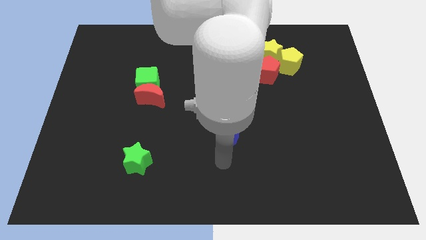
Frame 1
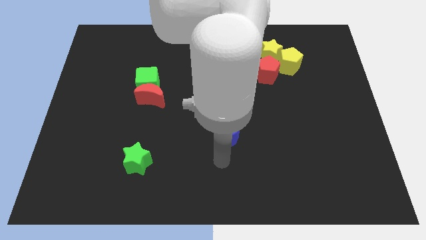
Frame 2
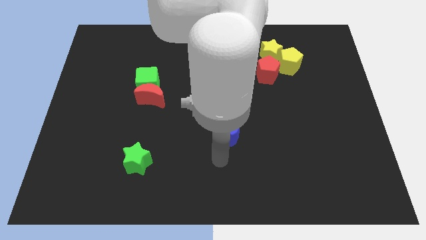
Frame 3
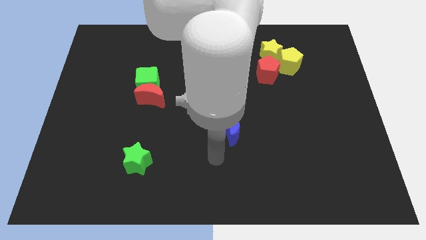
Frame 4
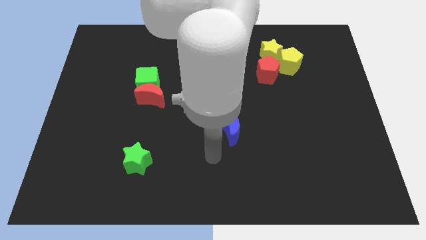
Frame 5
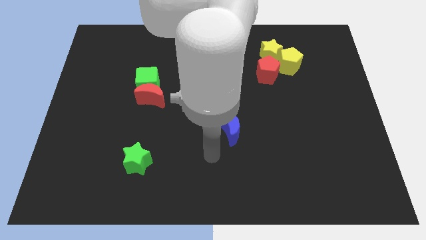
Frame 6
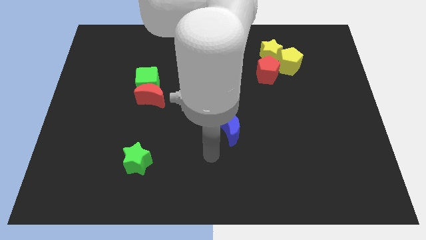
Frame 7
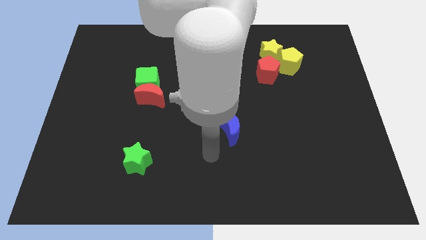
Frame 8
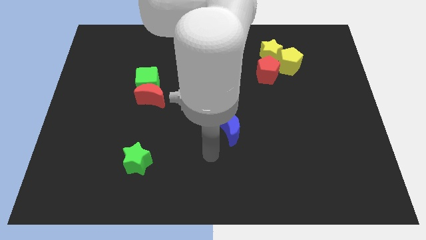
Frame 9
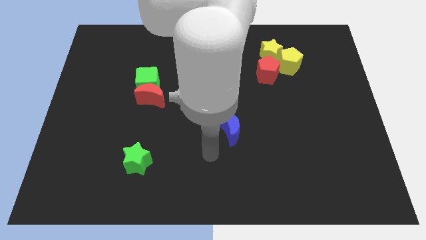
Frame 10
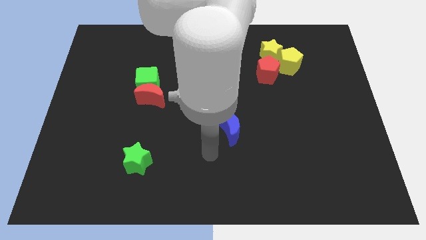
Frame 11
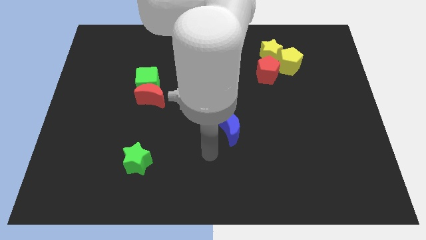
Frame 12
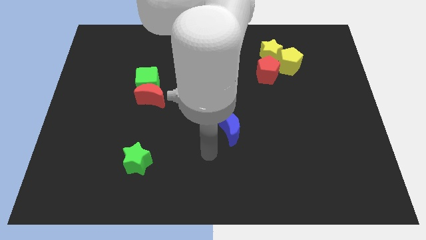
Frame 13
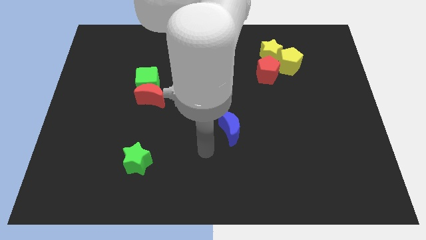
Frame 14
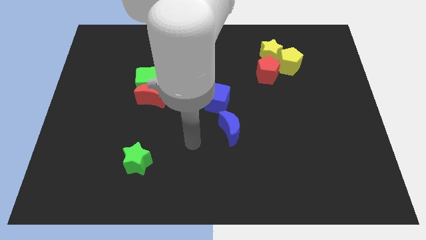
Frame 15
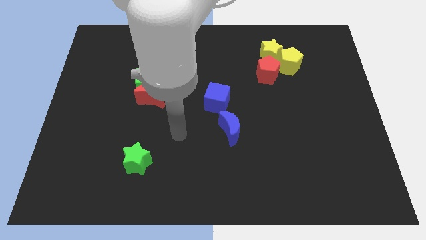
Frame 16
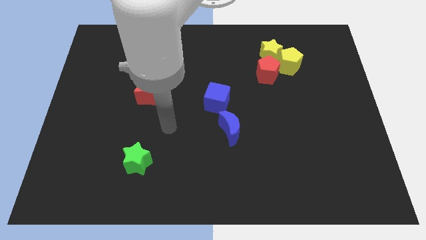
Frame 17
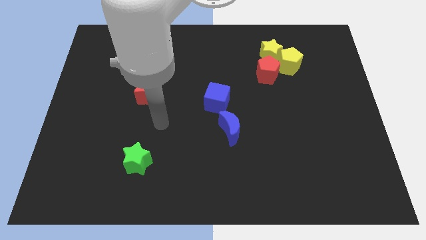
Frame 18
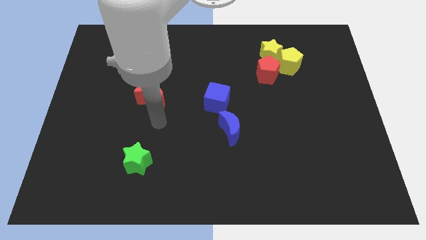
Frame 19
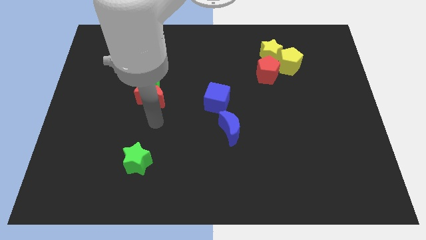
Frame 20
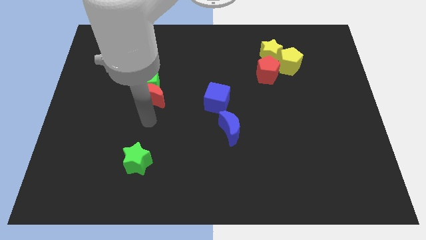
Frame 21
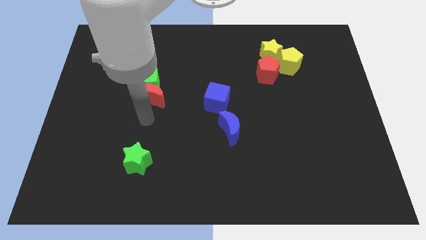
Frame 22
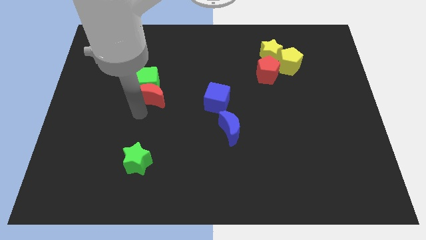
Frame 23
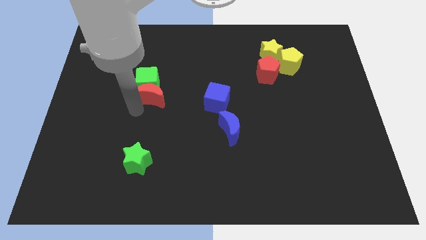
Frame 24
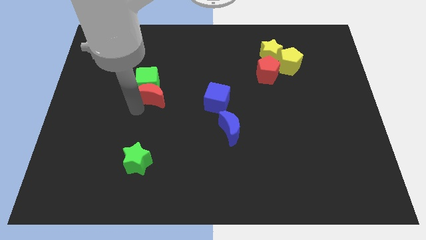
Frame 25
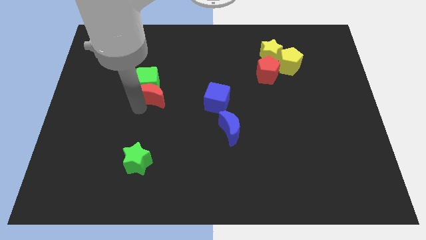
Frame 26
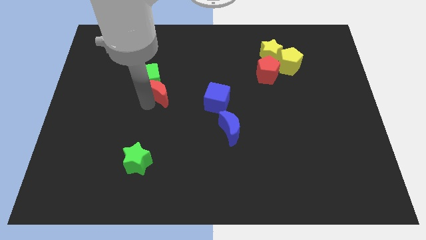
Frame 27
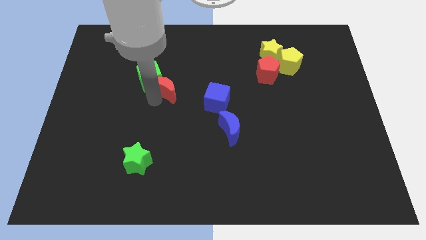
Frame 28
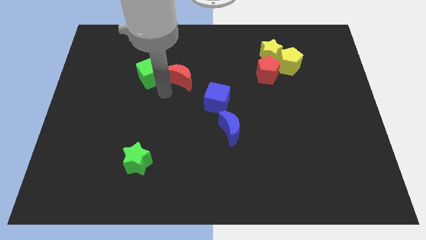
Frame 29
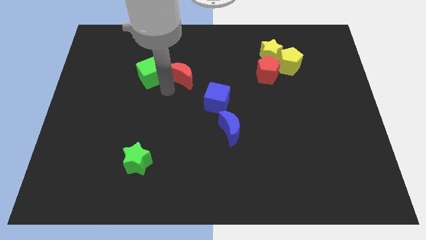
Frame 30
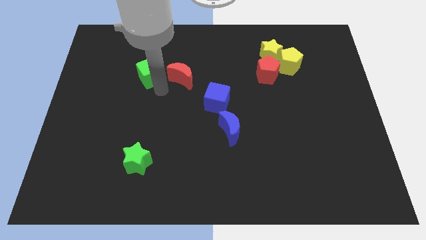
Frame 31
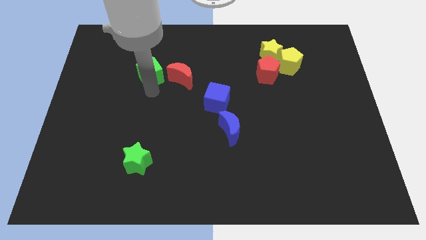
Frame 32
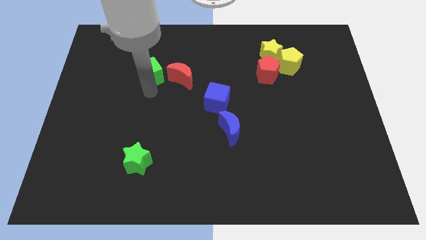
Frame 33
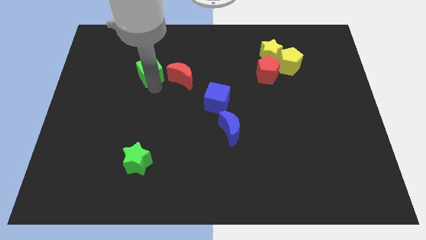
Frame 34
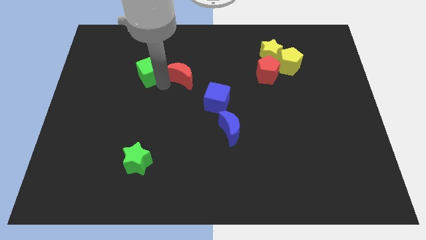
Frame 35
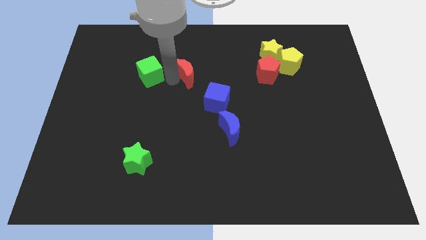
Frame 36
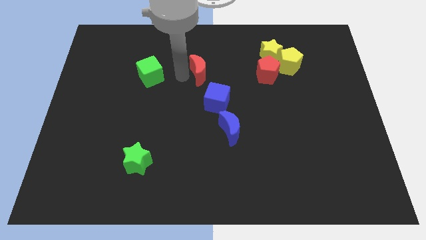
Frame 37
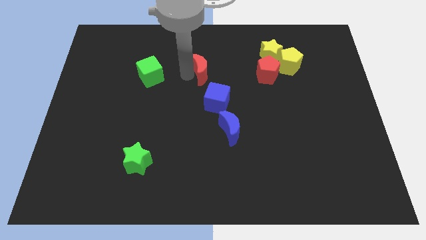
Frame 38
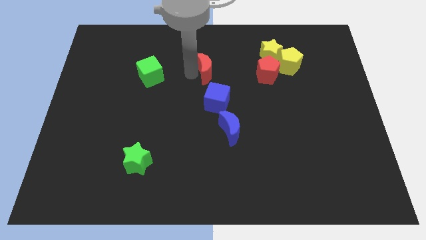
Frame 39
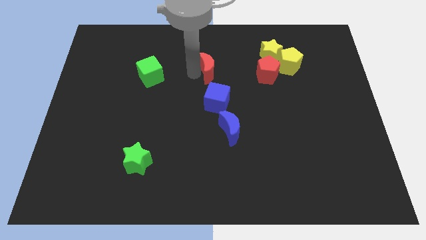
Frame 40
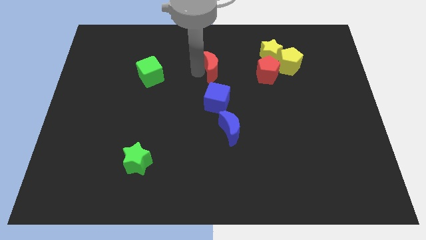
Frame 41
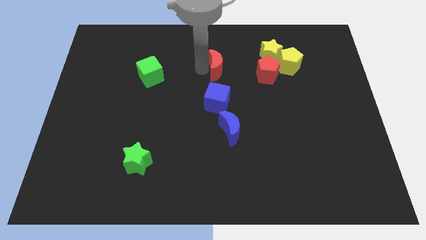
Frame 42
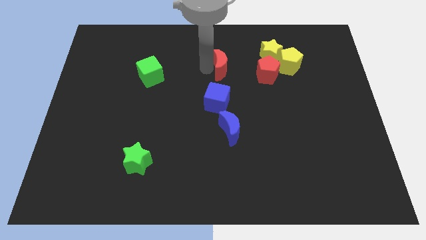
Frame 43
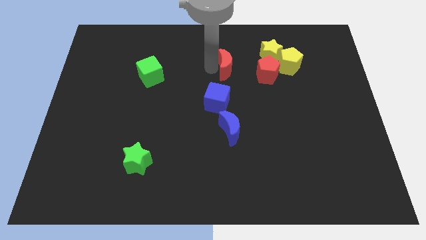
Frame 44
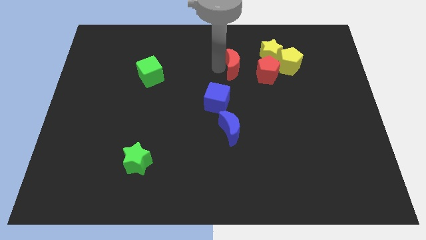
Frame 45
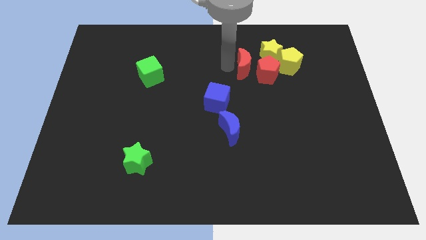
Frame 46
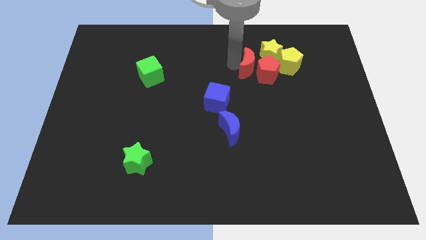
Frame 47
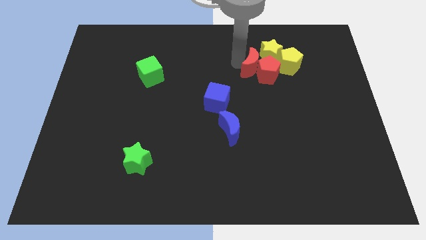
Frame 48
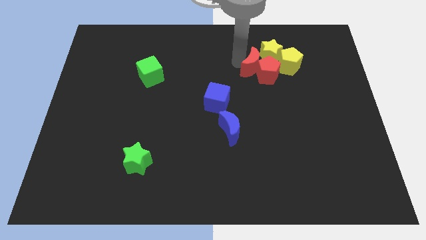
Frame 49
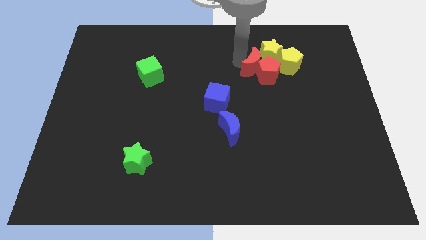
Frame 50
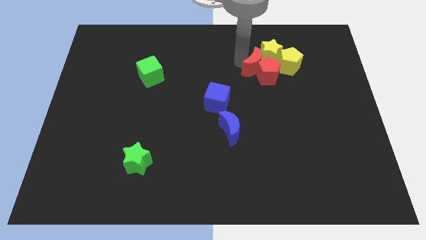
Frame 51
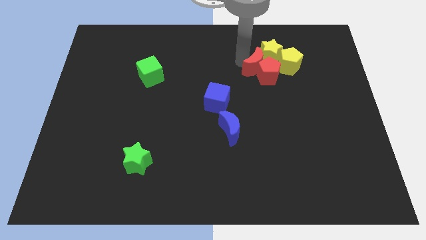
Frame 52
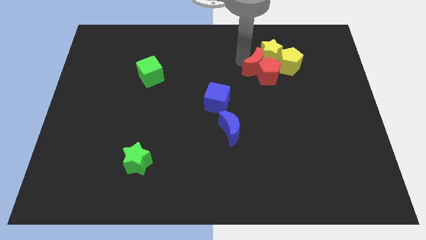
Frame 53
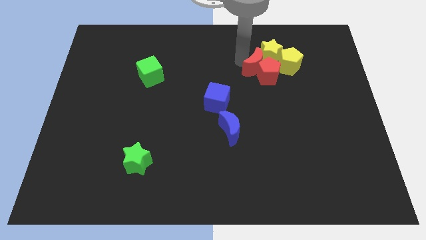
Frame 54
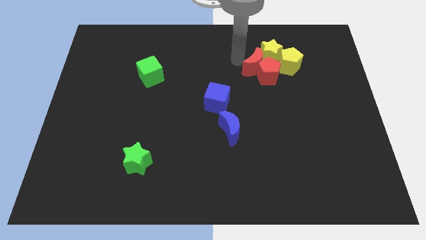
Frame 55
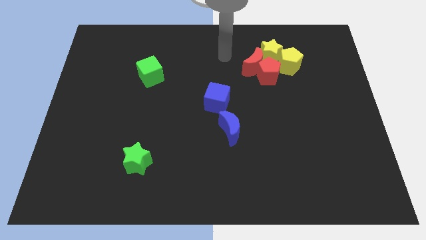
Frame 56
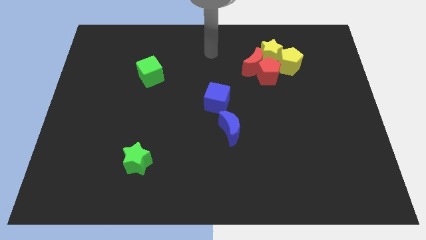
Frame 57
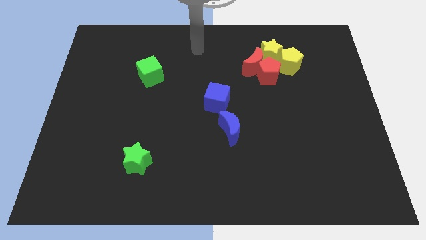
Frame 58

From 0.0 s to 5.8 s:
push the red crescent into the red pentagon

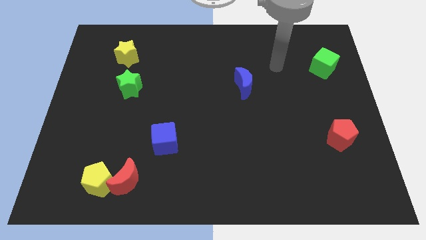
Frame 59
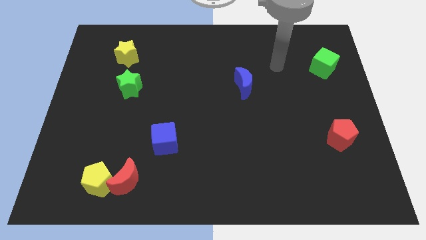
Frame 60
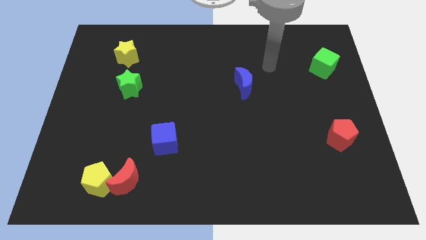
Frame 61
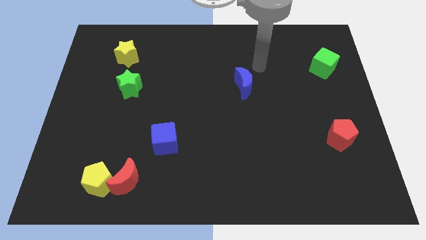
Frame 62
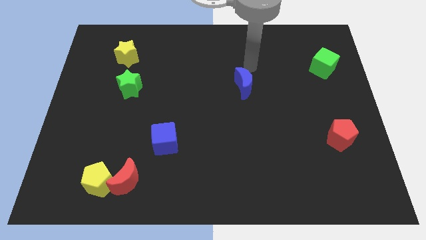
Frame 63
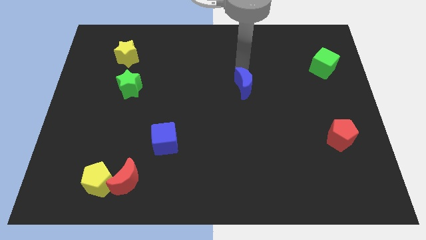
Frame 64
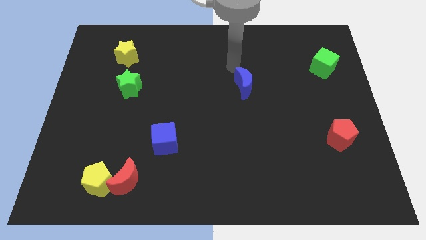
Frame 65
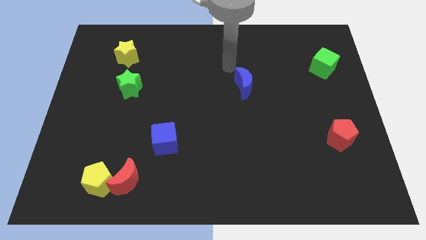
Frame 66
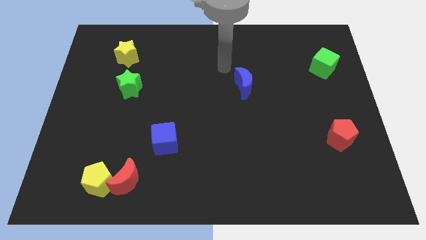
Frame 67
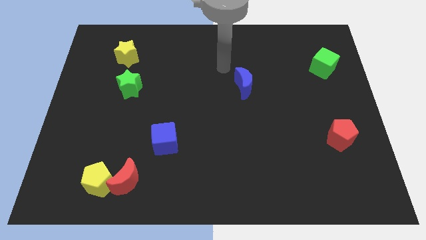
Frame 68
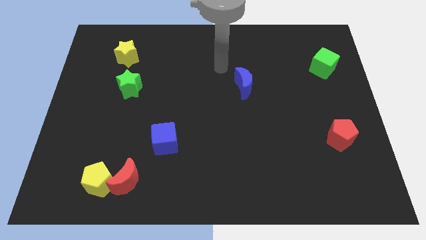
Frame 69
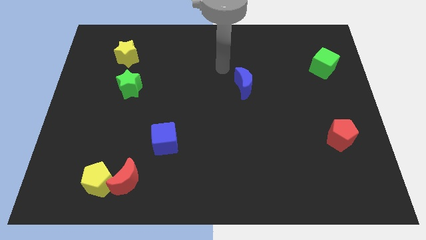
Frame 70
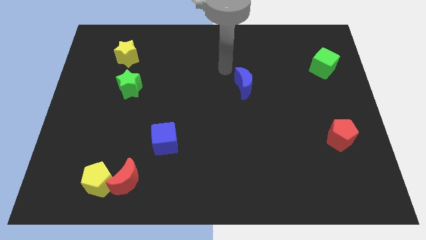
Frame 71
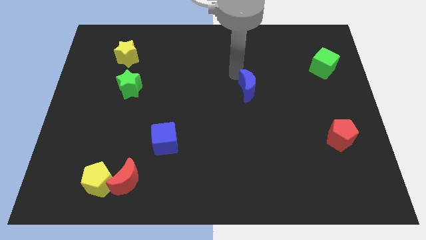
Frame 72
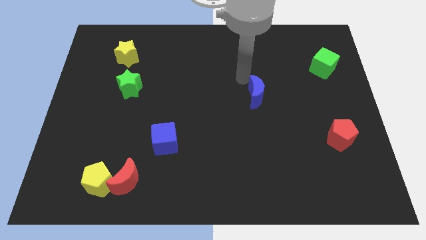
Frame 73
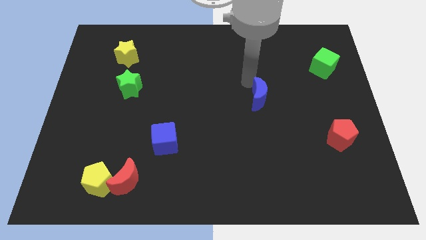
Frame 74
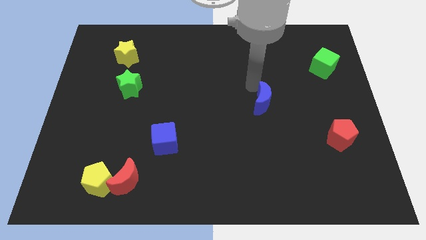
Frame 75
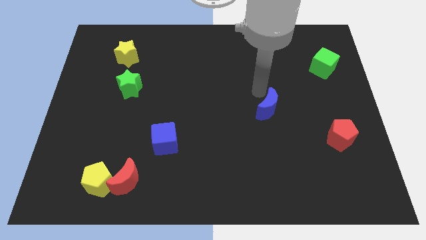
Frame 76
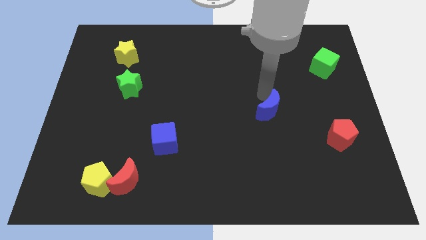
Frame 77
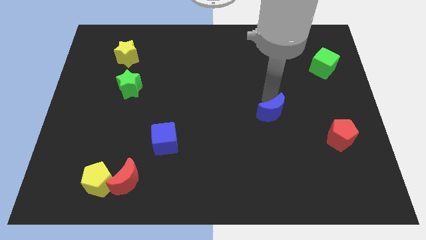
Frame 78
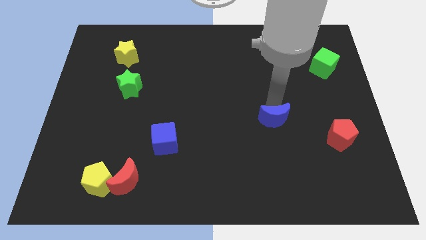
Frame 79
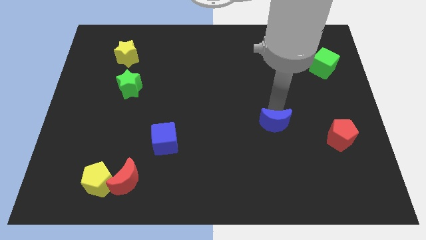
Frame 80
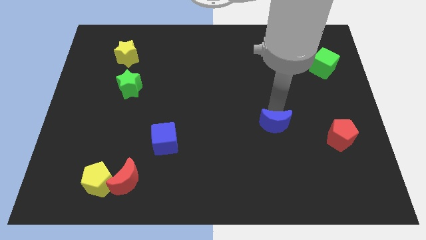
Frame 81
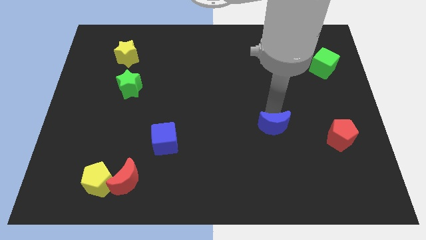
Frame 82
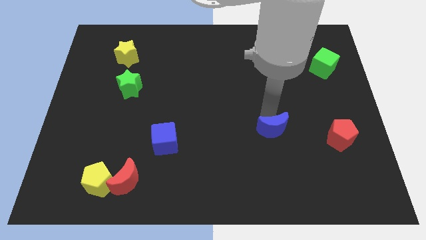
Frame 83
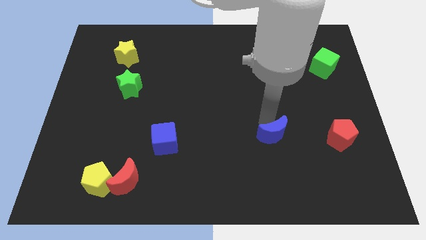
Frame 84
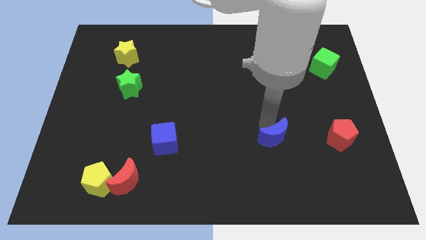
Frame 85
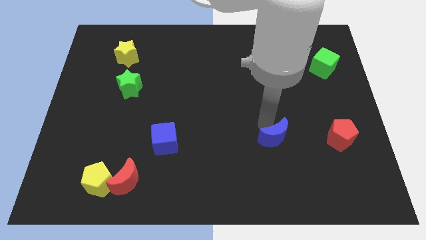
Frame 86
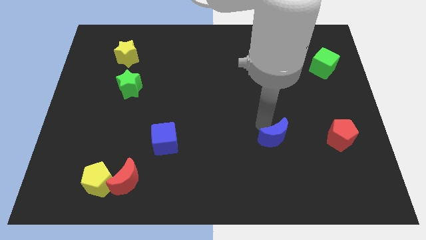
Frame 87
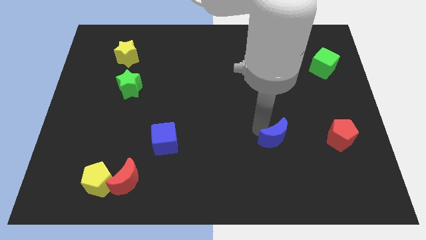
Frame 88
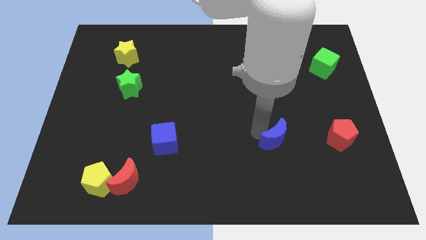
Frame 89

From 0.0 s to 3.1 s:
put the blue moon at the left side of the red pentagon
